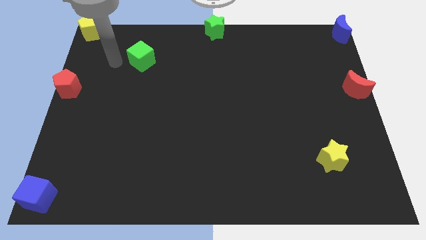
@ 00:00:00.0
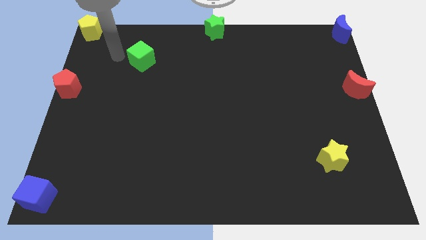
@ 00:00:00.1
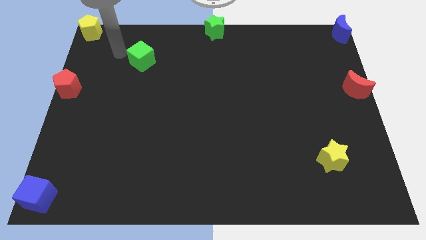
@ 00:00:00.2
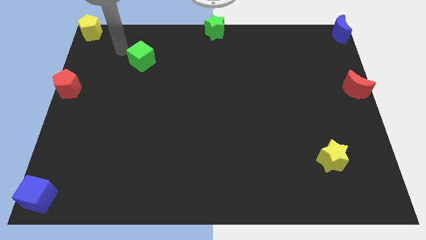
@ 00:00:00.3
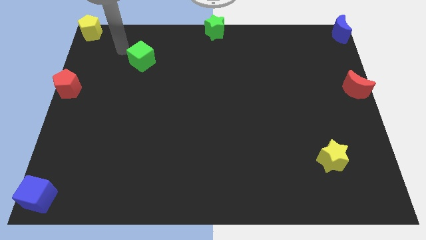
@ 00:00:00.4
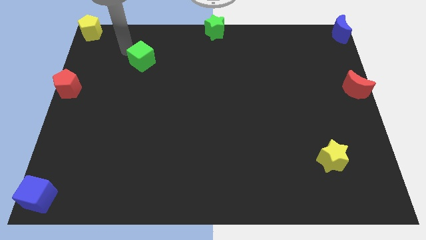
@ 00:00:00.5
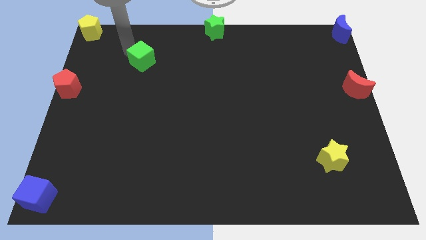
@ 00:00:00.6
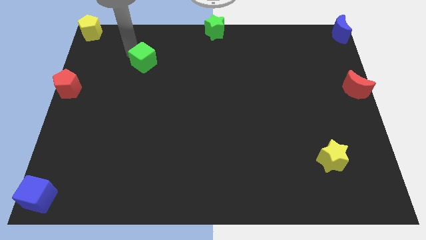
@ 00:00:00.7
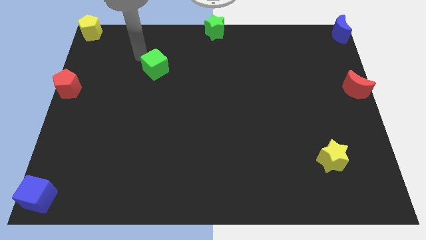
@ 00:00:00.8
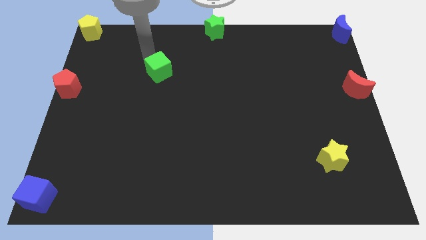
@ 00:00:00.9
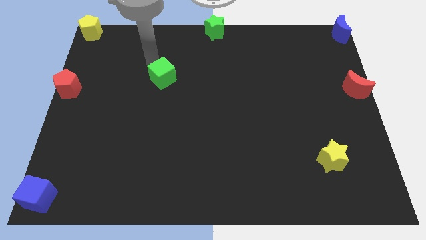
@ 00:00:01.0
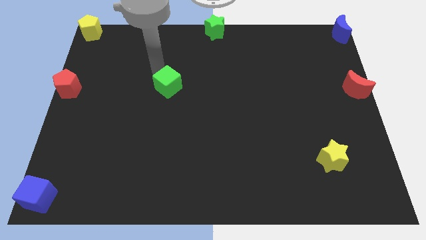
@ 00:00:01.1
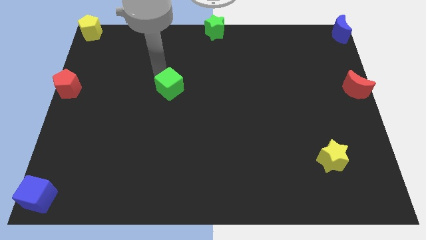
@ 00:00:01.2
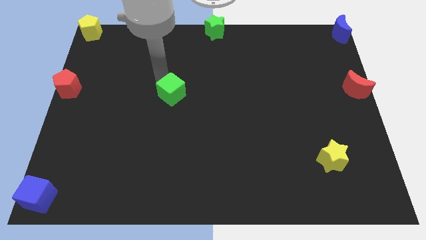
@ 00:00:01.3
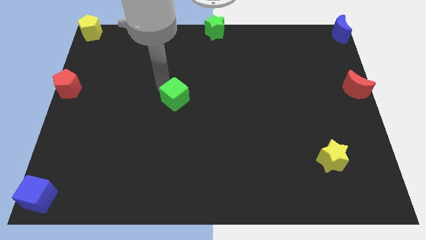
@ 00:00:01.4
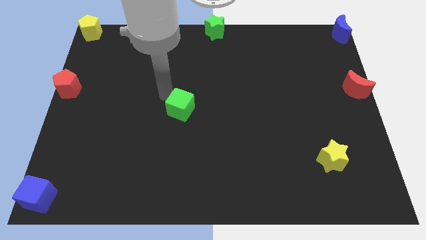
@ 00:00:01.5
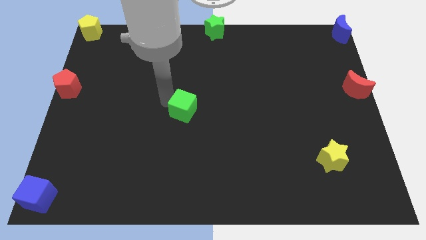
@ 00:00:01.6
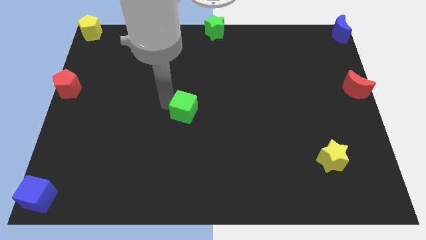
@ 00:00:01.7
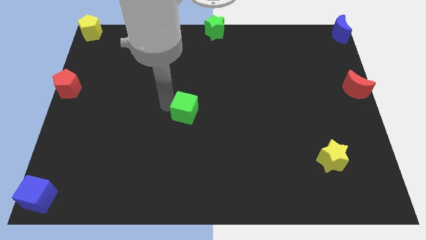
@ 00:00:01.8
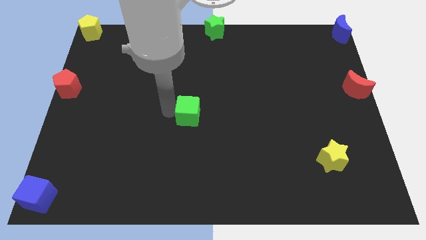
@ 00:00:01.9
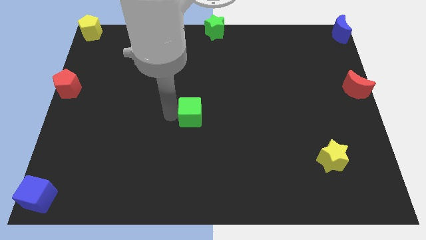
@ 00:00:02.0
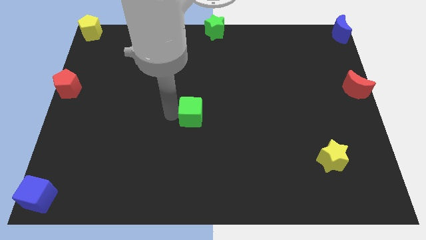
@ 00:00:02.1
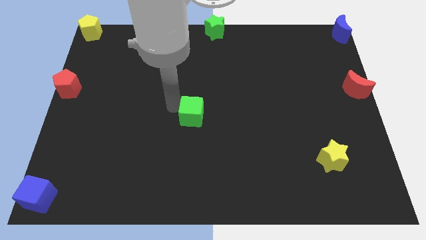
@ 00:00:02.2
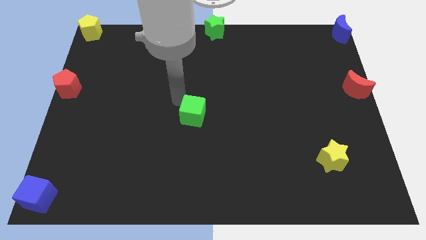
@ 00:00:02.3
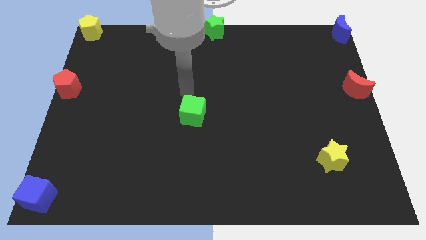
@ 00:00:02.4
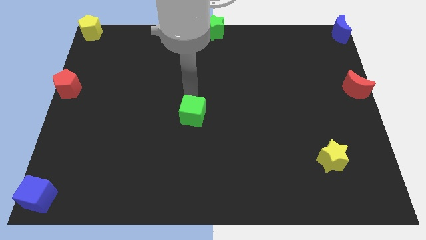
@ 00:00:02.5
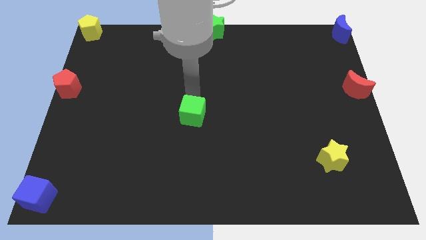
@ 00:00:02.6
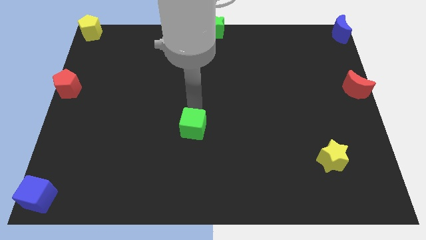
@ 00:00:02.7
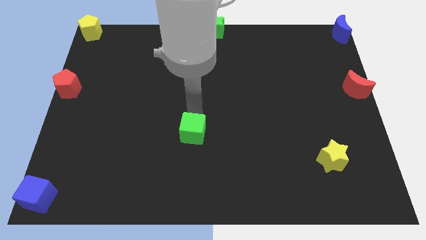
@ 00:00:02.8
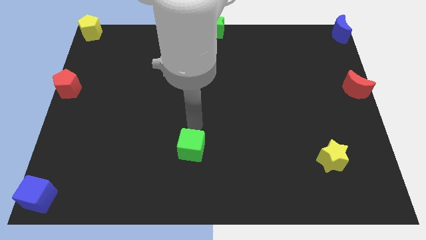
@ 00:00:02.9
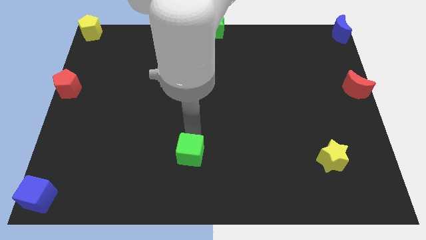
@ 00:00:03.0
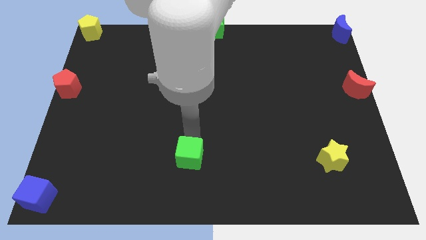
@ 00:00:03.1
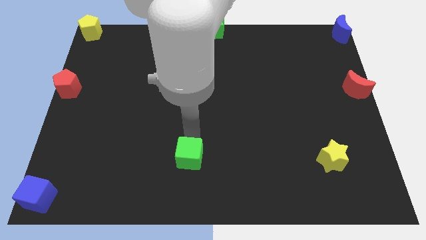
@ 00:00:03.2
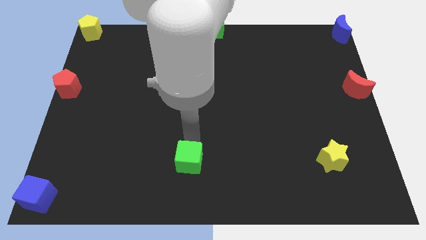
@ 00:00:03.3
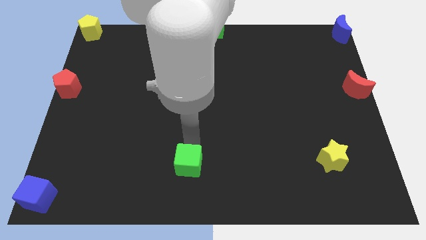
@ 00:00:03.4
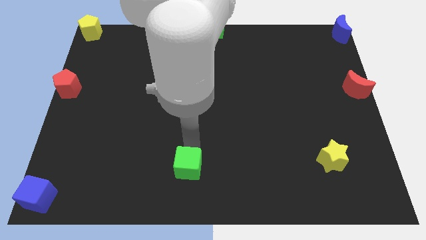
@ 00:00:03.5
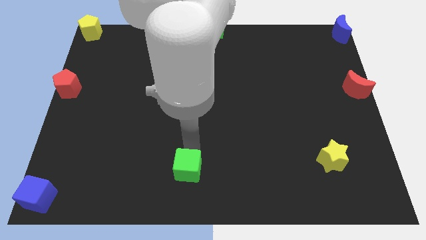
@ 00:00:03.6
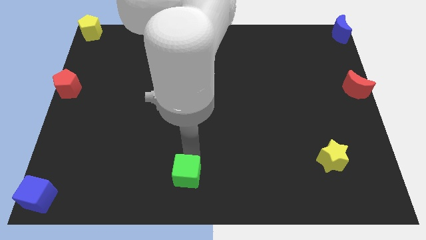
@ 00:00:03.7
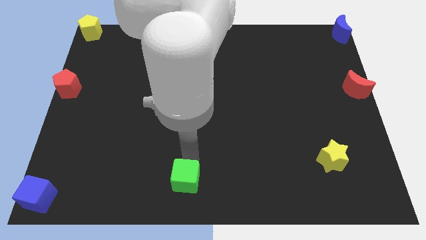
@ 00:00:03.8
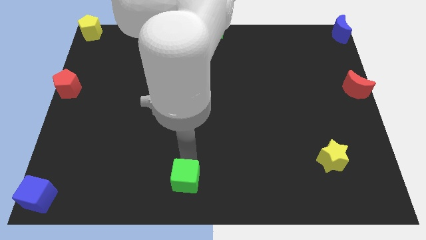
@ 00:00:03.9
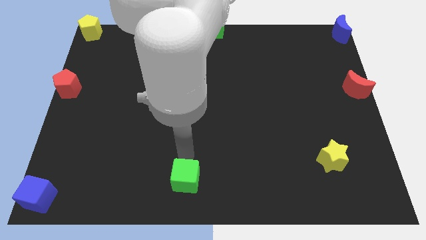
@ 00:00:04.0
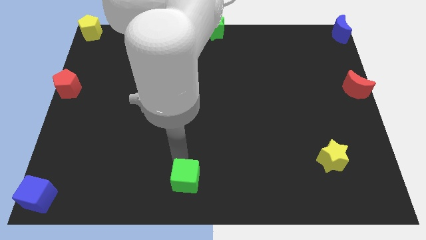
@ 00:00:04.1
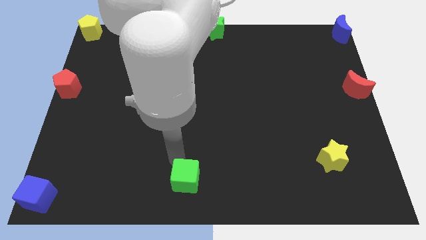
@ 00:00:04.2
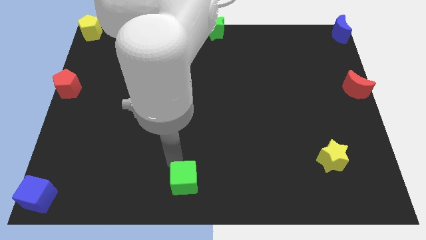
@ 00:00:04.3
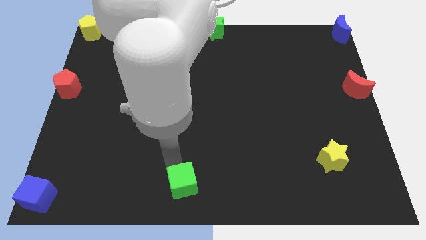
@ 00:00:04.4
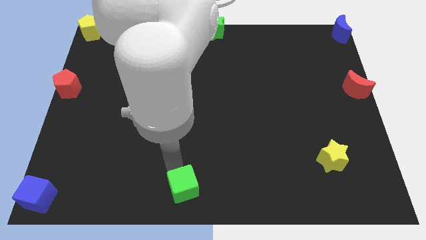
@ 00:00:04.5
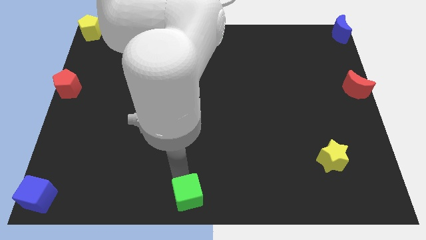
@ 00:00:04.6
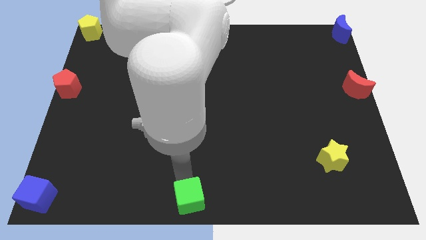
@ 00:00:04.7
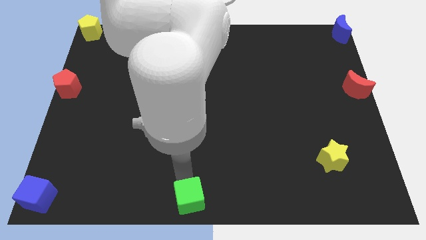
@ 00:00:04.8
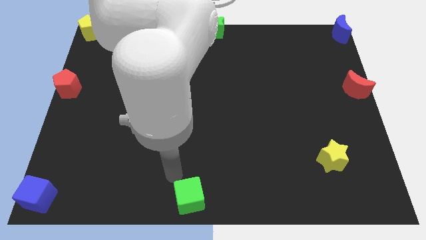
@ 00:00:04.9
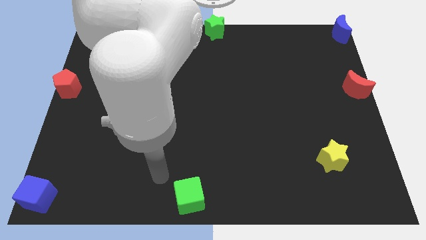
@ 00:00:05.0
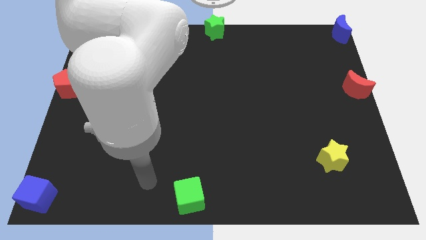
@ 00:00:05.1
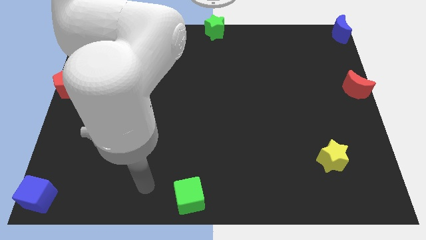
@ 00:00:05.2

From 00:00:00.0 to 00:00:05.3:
push the green cube to the bottom center

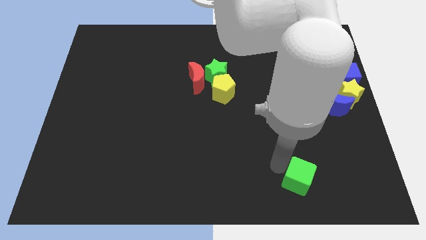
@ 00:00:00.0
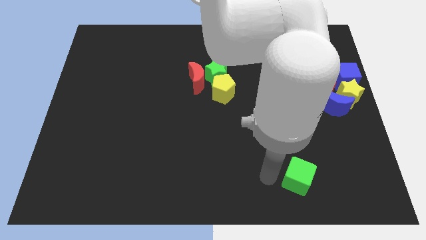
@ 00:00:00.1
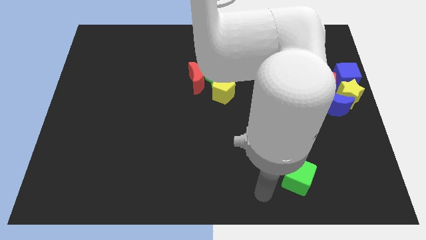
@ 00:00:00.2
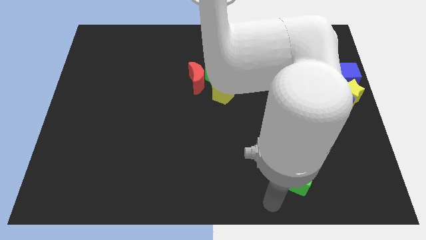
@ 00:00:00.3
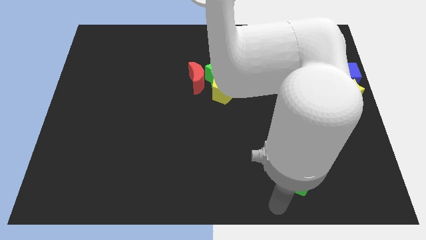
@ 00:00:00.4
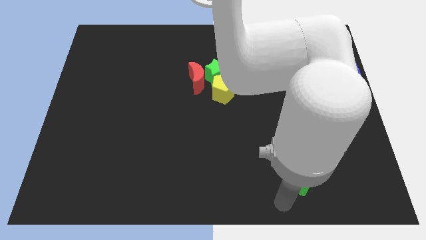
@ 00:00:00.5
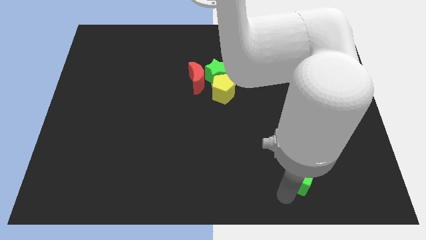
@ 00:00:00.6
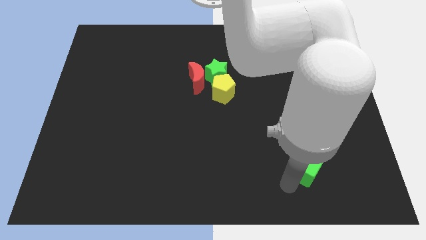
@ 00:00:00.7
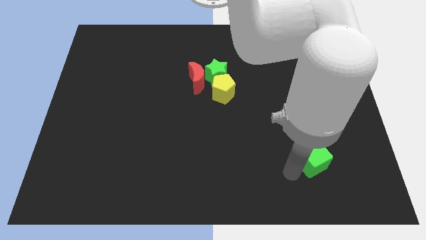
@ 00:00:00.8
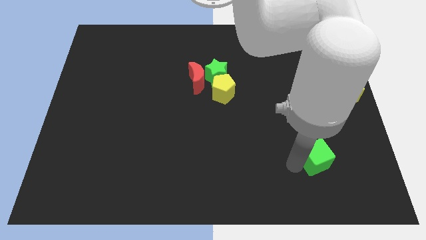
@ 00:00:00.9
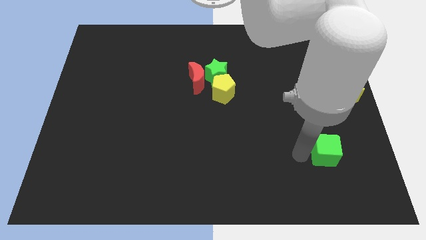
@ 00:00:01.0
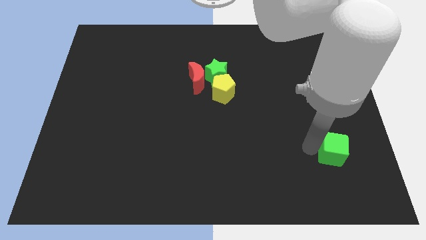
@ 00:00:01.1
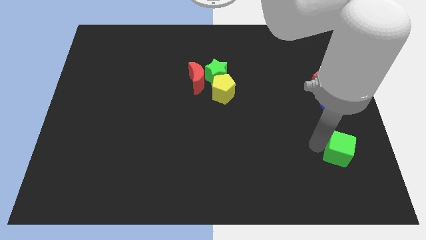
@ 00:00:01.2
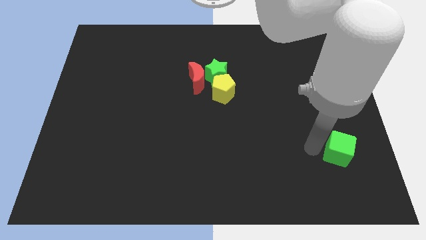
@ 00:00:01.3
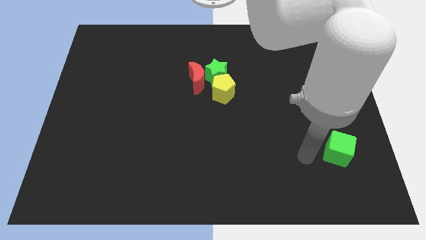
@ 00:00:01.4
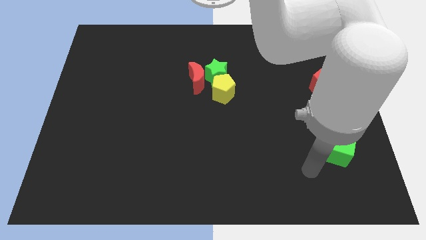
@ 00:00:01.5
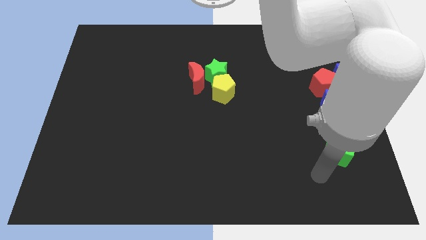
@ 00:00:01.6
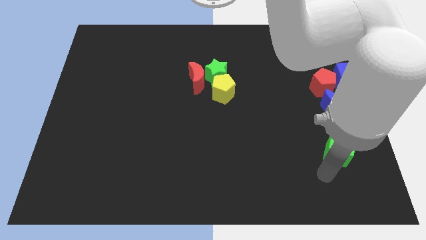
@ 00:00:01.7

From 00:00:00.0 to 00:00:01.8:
move the green cube to the bottom side of the group of blocks

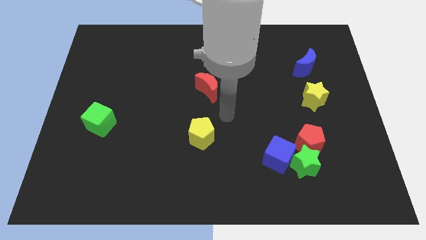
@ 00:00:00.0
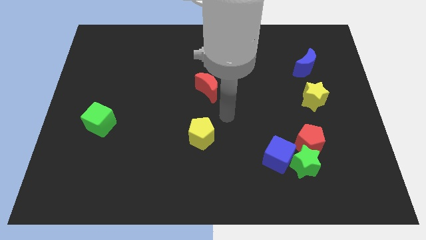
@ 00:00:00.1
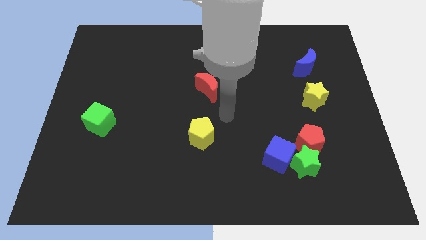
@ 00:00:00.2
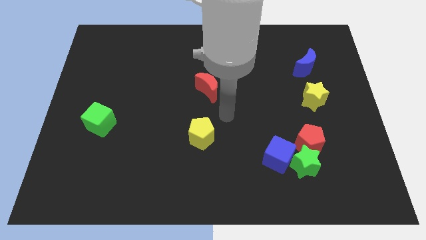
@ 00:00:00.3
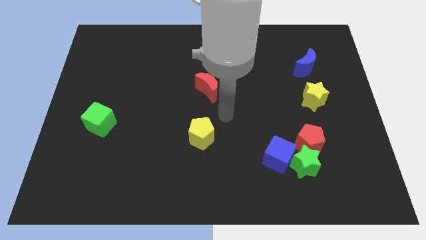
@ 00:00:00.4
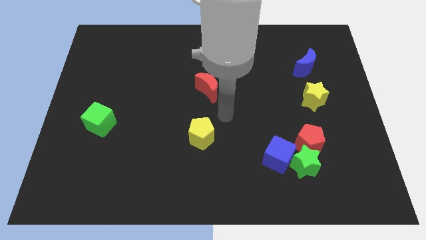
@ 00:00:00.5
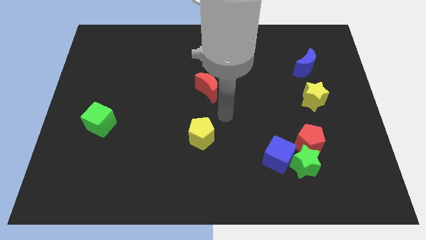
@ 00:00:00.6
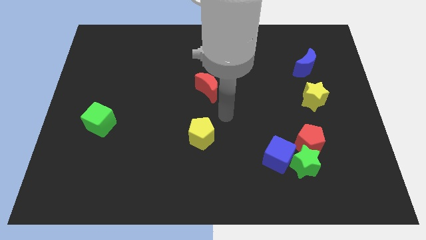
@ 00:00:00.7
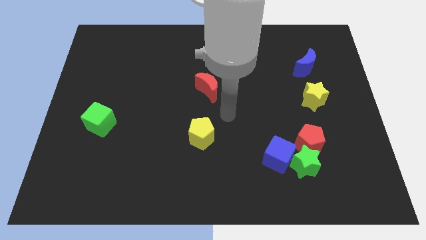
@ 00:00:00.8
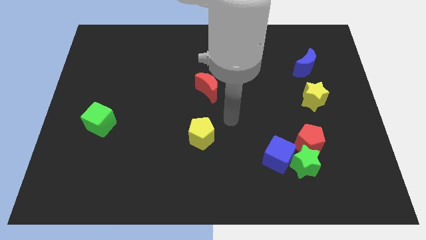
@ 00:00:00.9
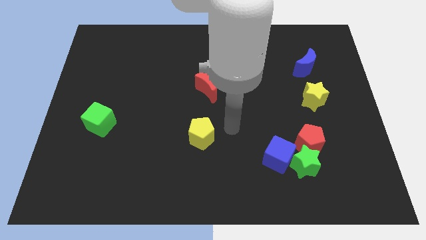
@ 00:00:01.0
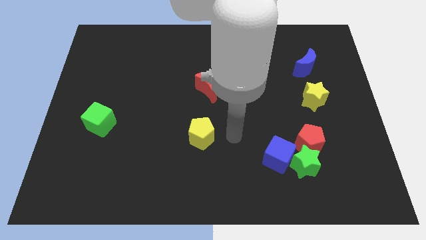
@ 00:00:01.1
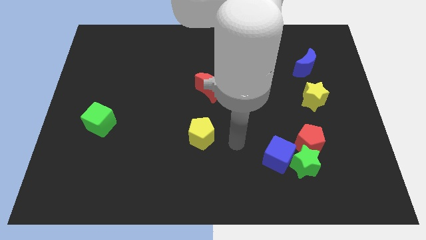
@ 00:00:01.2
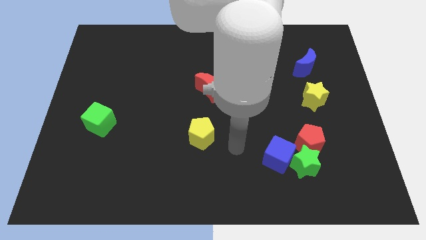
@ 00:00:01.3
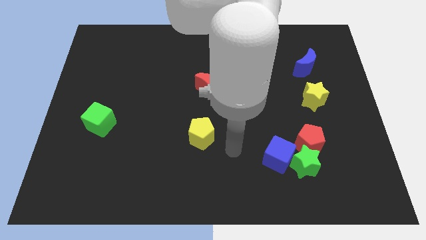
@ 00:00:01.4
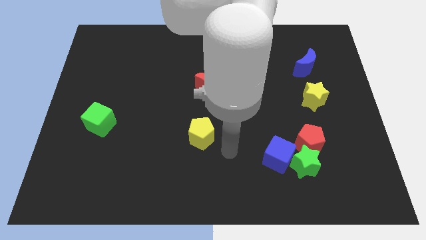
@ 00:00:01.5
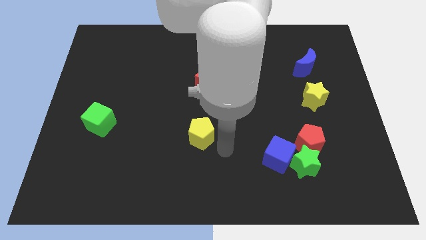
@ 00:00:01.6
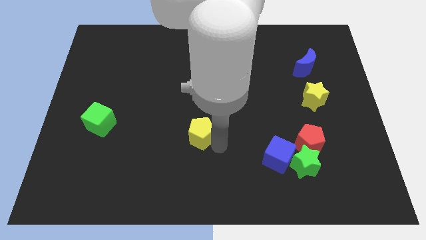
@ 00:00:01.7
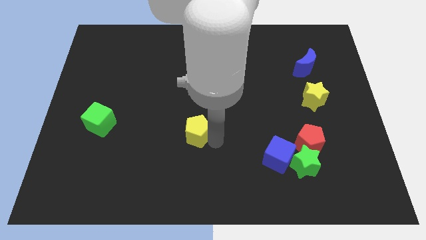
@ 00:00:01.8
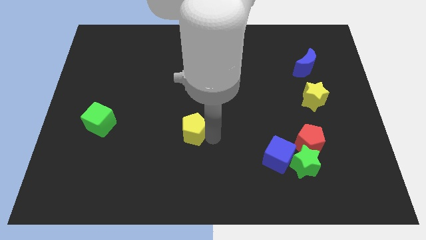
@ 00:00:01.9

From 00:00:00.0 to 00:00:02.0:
point your arm close to yellow pentagon
